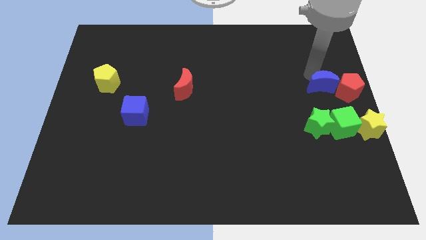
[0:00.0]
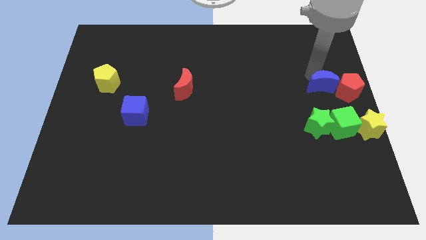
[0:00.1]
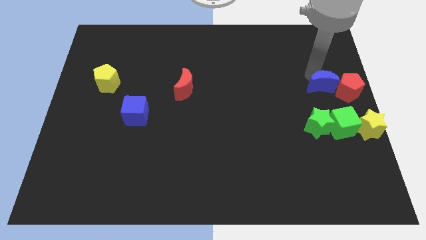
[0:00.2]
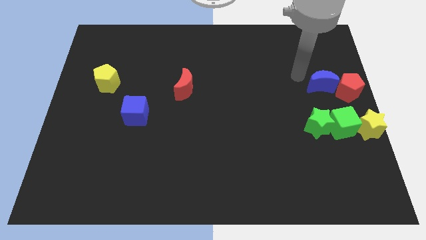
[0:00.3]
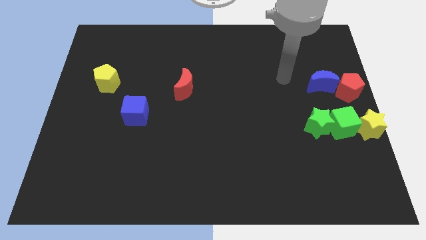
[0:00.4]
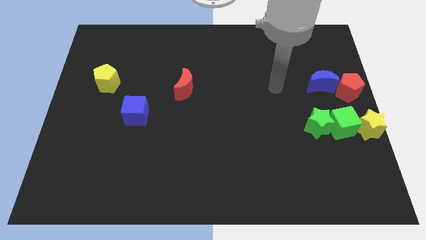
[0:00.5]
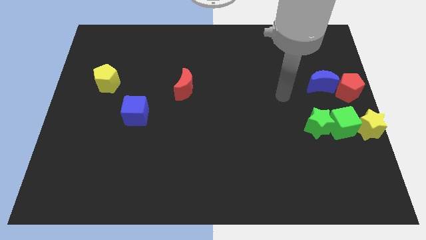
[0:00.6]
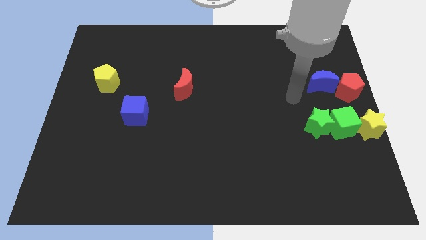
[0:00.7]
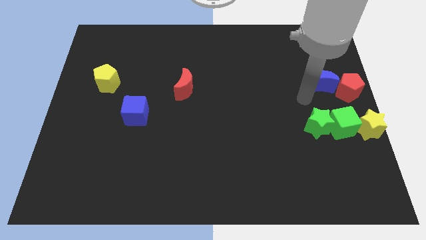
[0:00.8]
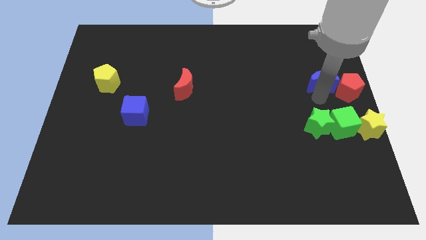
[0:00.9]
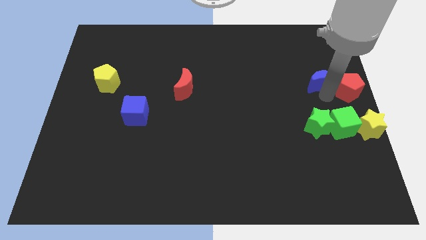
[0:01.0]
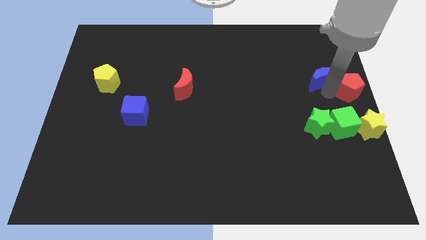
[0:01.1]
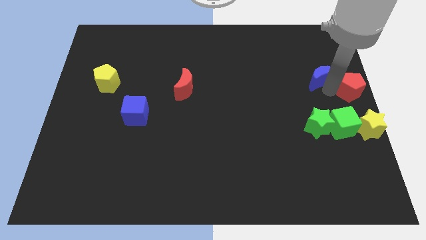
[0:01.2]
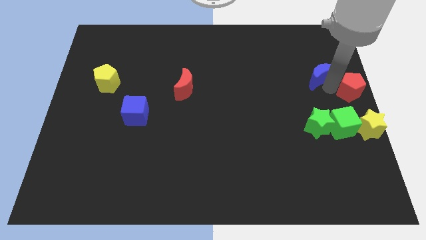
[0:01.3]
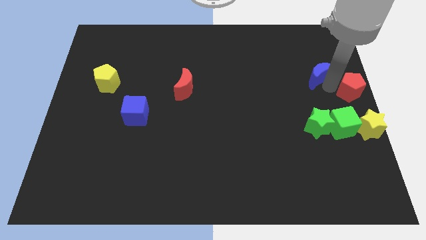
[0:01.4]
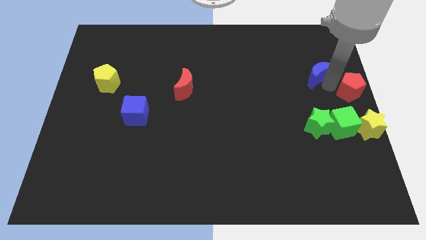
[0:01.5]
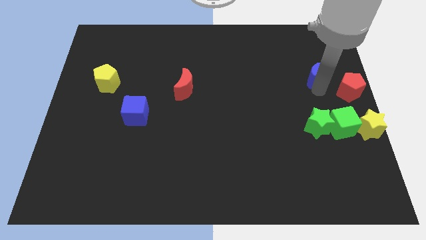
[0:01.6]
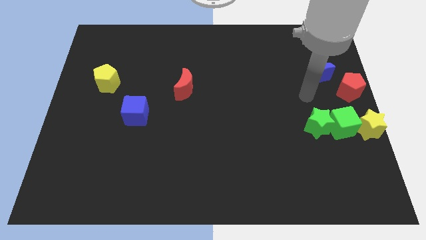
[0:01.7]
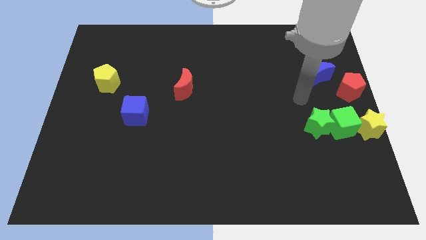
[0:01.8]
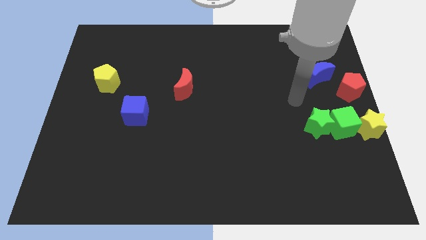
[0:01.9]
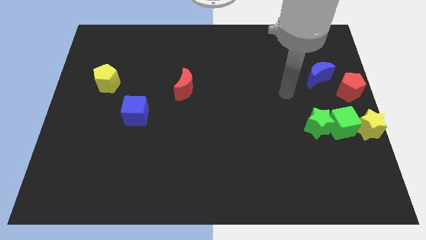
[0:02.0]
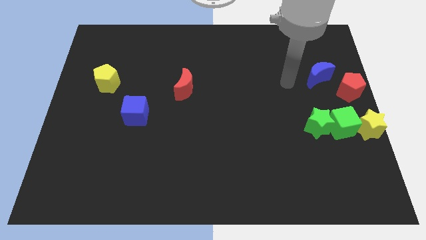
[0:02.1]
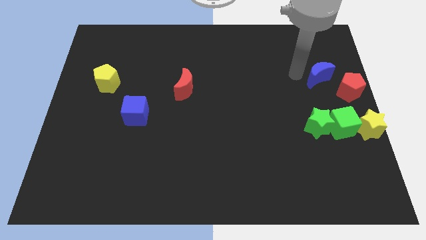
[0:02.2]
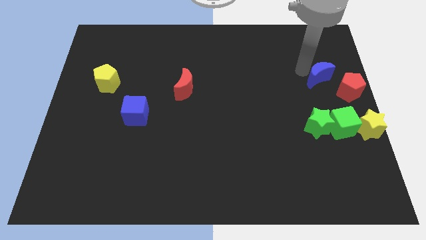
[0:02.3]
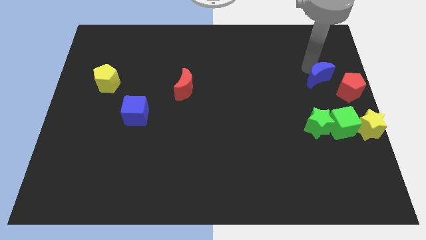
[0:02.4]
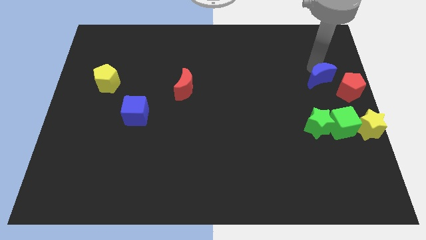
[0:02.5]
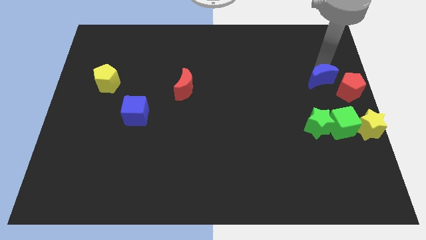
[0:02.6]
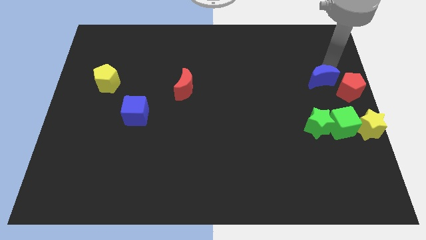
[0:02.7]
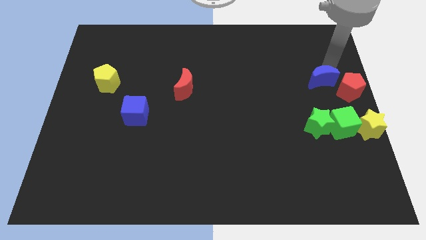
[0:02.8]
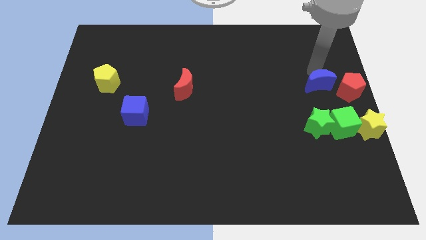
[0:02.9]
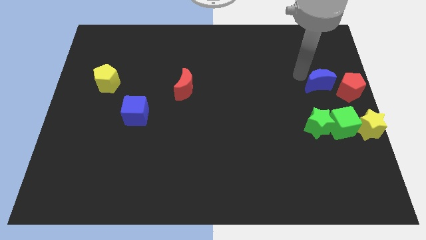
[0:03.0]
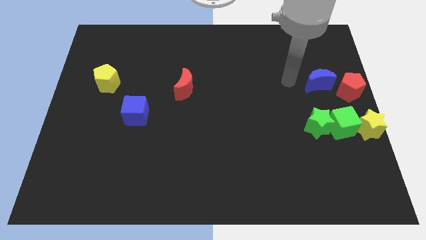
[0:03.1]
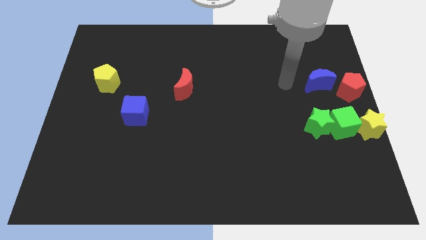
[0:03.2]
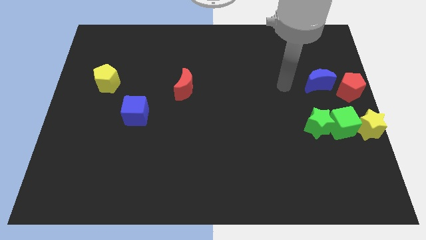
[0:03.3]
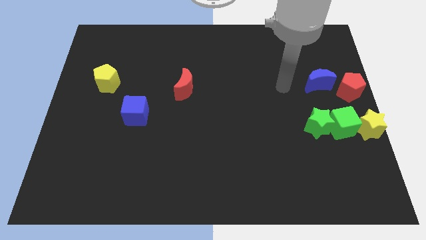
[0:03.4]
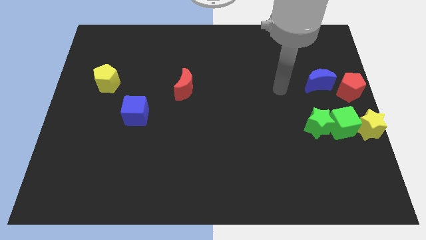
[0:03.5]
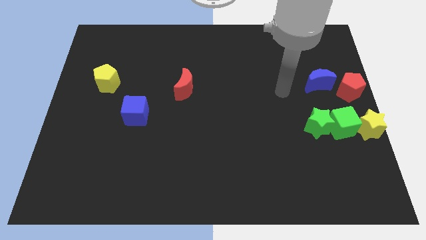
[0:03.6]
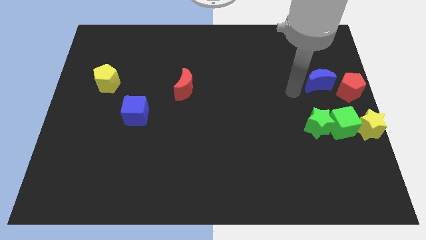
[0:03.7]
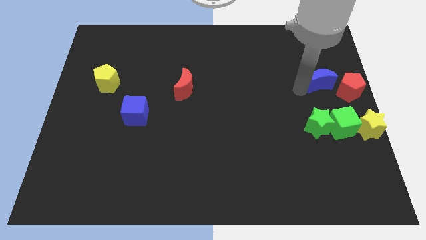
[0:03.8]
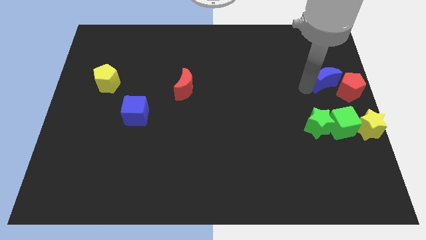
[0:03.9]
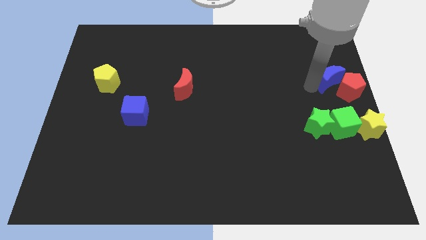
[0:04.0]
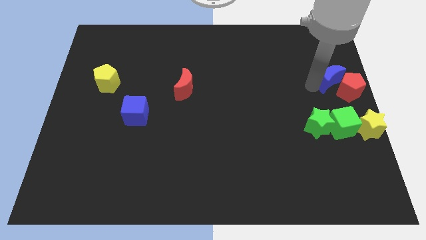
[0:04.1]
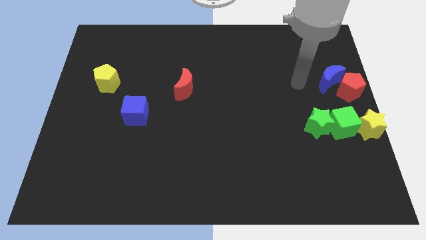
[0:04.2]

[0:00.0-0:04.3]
move the blue crescent to the top left of the red pentagon

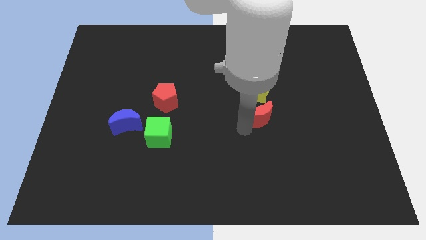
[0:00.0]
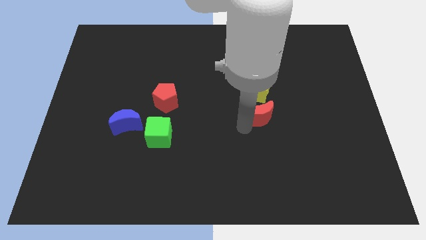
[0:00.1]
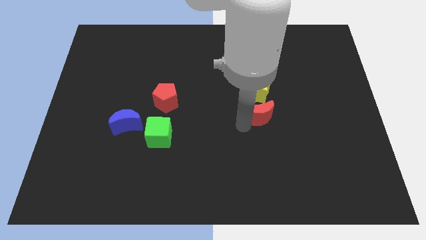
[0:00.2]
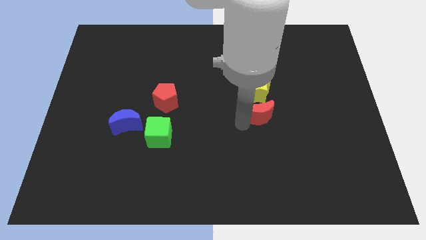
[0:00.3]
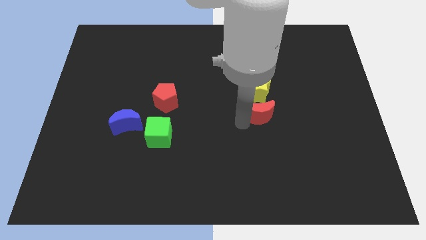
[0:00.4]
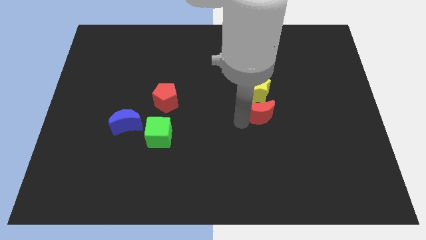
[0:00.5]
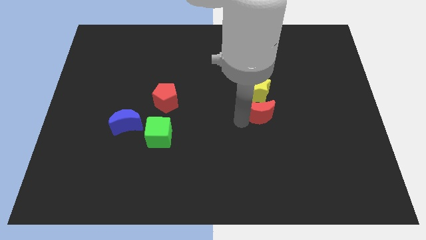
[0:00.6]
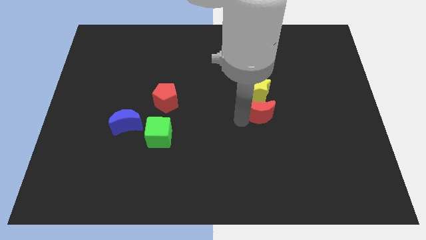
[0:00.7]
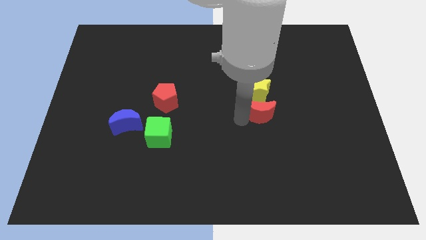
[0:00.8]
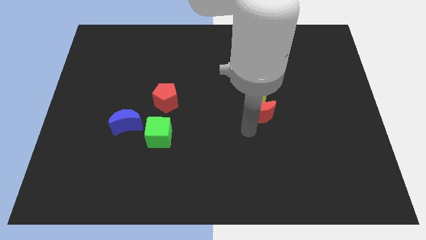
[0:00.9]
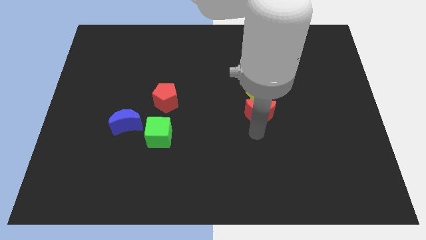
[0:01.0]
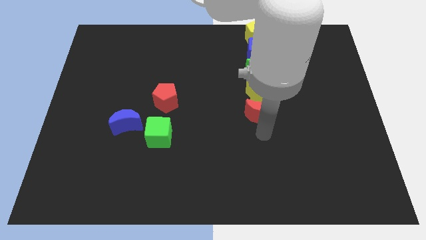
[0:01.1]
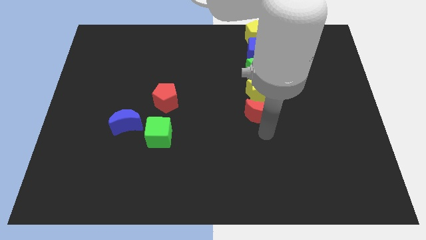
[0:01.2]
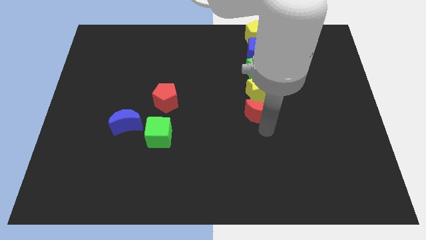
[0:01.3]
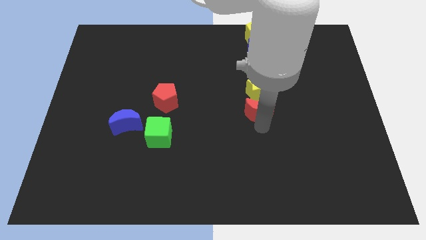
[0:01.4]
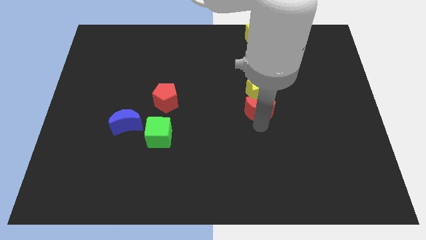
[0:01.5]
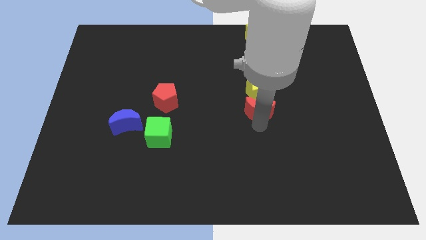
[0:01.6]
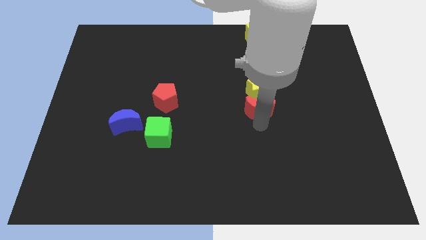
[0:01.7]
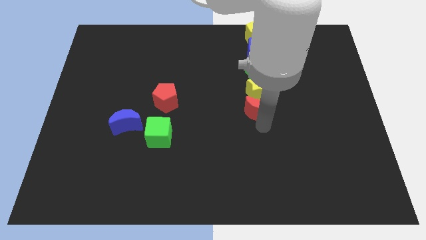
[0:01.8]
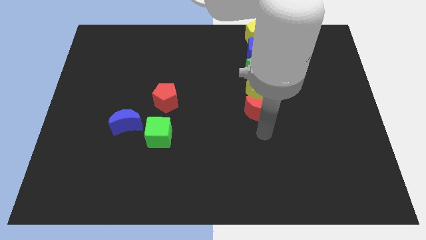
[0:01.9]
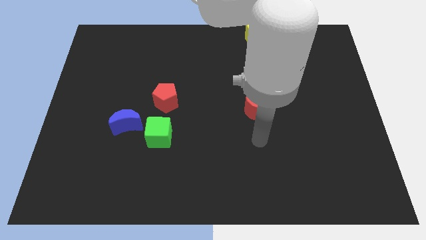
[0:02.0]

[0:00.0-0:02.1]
move red moon into yellow star

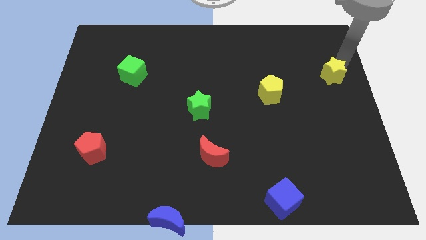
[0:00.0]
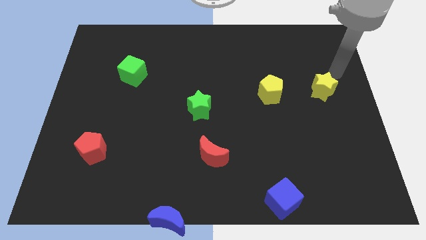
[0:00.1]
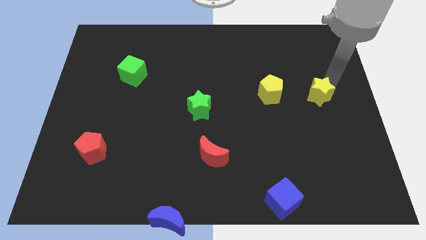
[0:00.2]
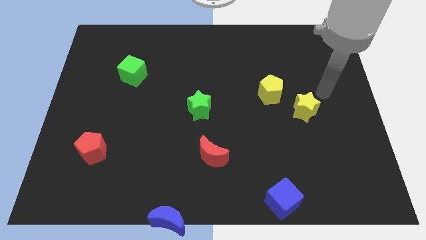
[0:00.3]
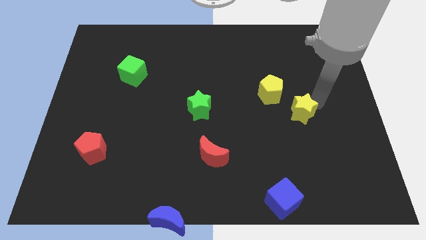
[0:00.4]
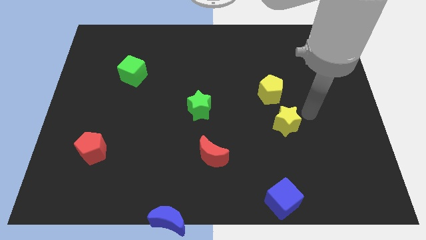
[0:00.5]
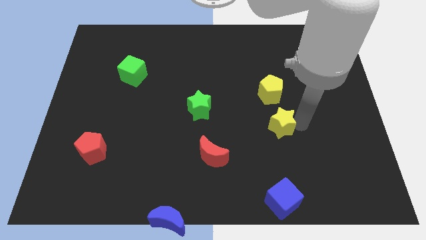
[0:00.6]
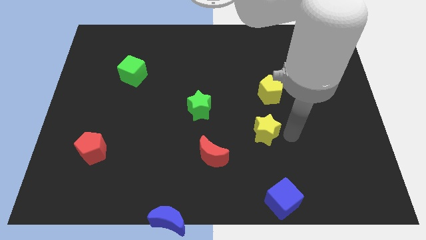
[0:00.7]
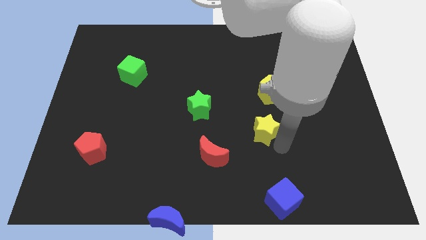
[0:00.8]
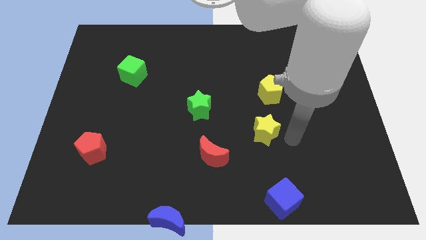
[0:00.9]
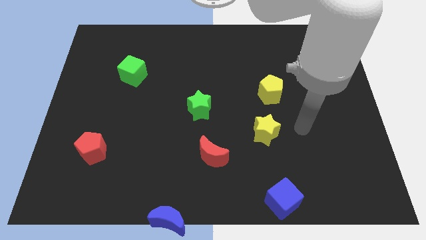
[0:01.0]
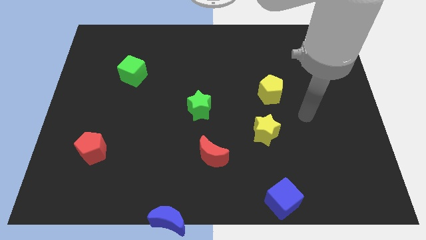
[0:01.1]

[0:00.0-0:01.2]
place the yellow star below the yellow pentagon

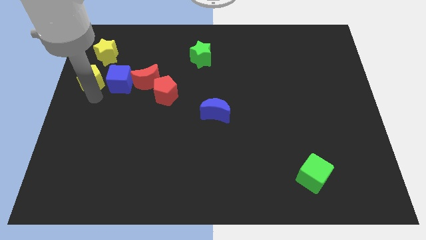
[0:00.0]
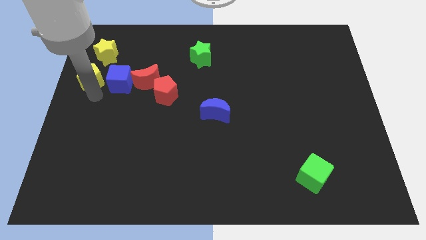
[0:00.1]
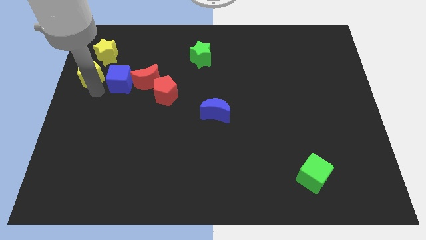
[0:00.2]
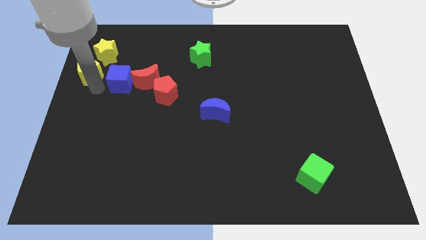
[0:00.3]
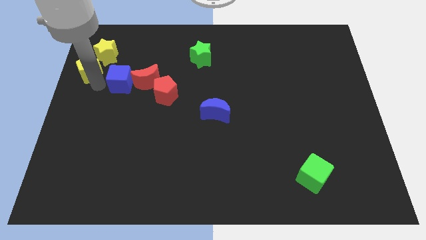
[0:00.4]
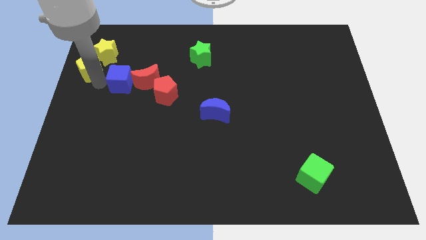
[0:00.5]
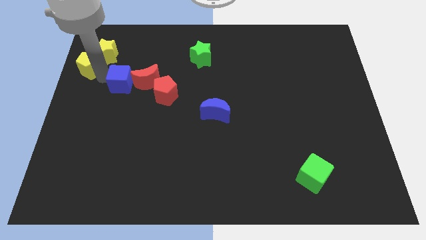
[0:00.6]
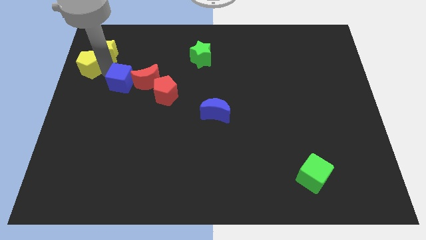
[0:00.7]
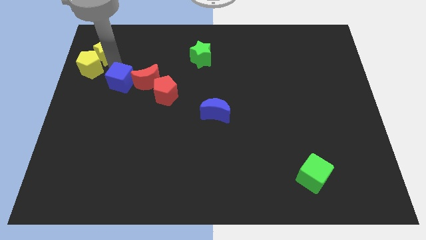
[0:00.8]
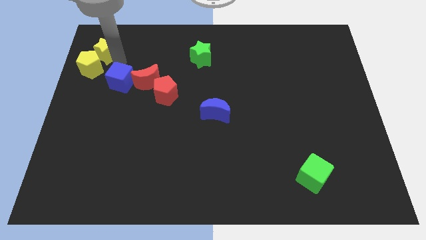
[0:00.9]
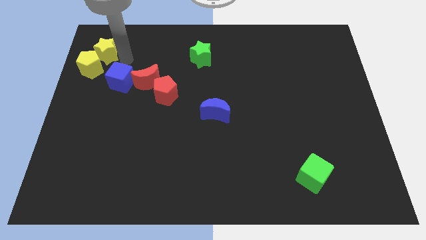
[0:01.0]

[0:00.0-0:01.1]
move the yellow pentagon to the bottom left of the yellow star

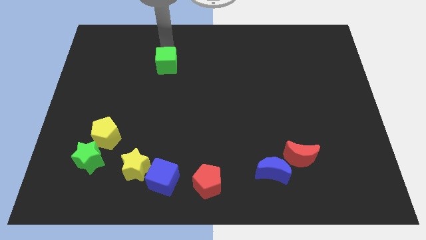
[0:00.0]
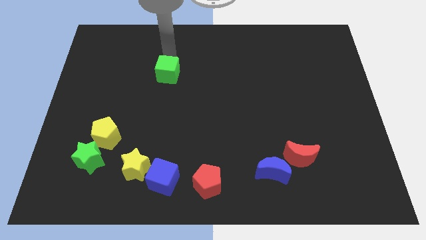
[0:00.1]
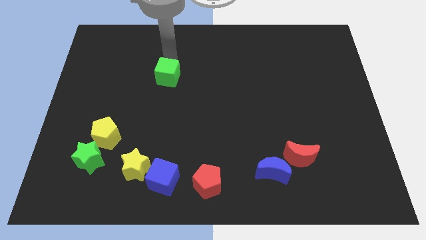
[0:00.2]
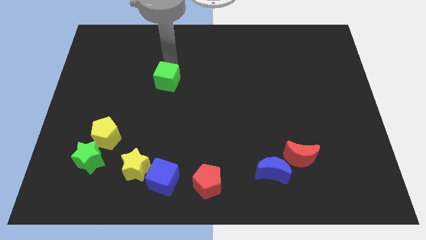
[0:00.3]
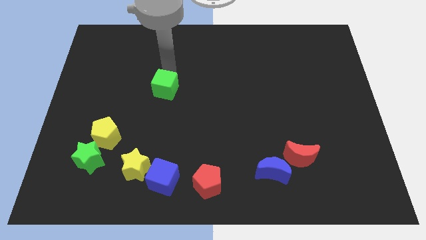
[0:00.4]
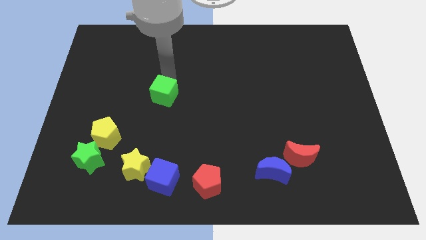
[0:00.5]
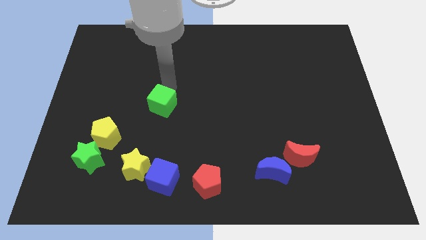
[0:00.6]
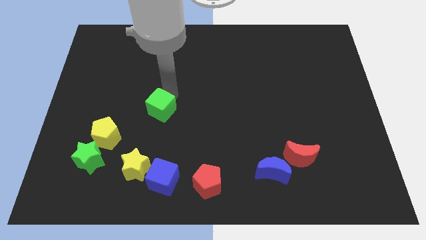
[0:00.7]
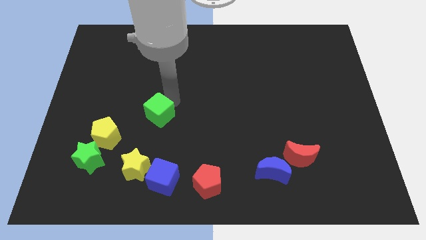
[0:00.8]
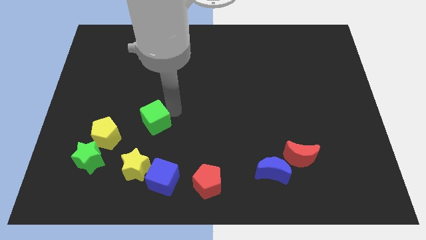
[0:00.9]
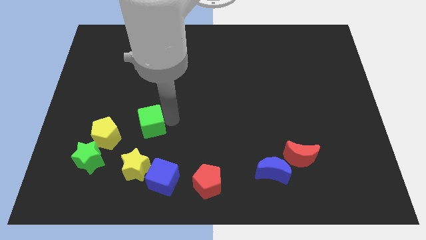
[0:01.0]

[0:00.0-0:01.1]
push the green cube vertical to the yellow star
